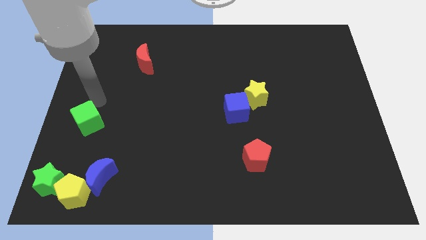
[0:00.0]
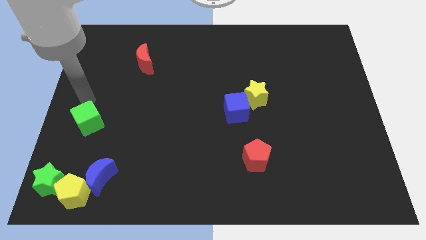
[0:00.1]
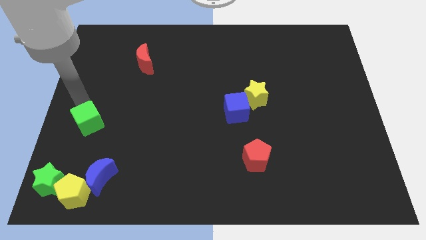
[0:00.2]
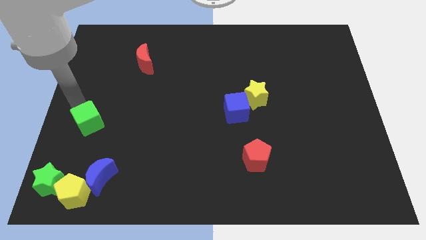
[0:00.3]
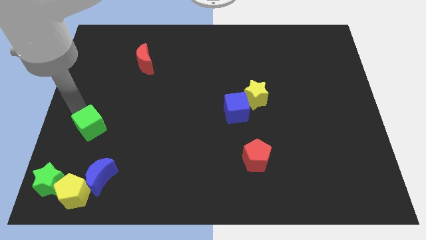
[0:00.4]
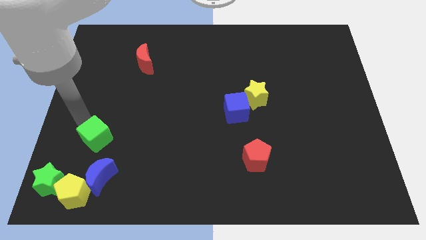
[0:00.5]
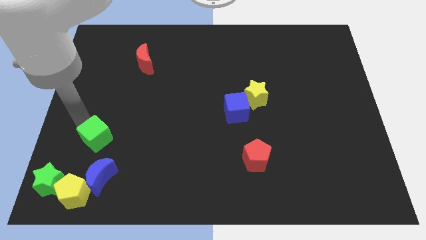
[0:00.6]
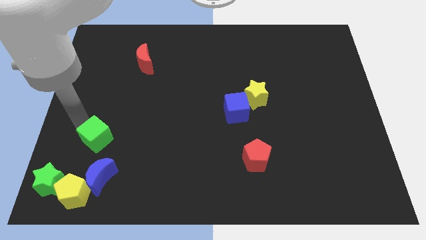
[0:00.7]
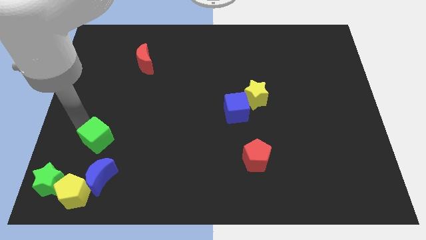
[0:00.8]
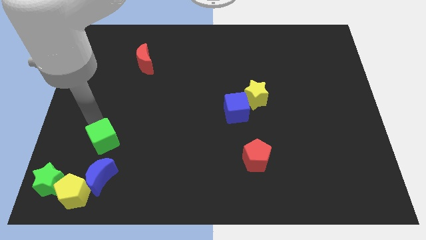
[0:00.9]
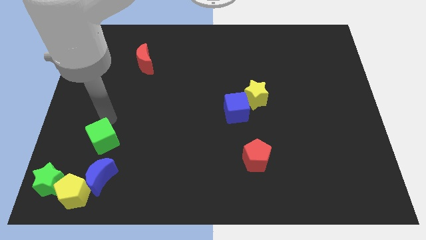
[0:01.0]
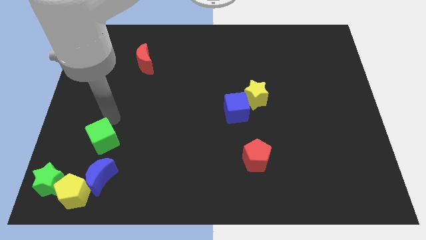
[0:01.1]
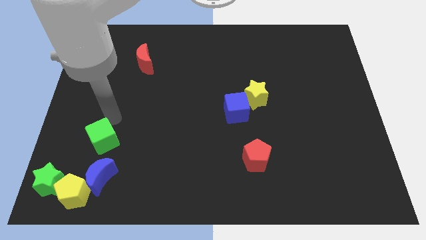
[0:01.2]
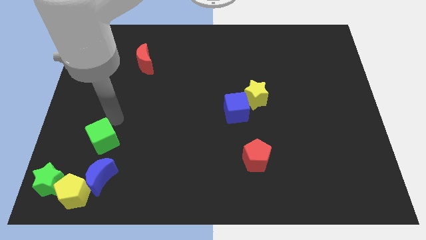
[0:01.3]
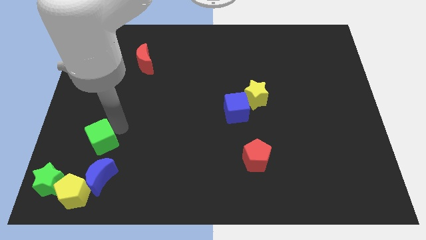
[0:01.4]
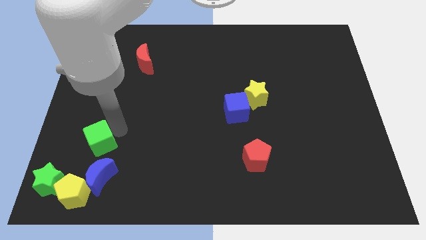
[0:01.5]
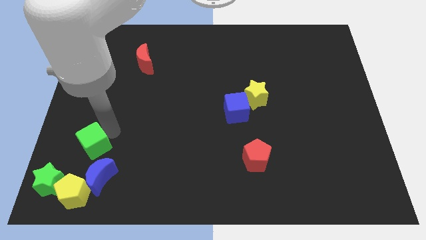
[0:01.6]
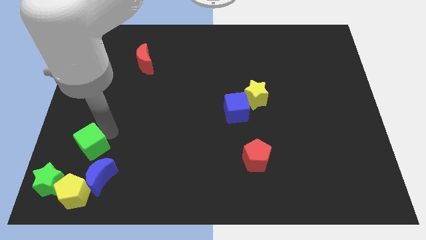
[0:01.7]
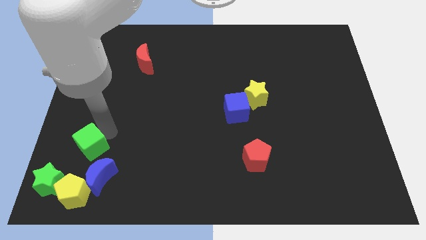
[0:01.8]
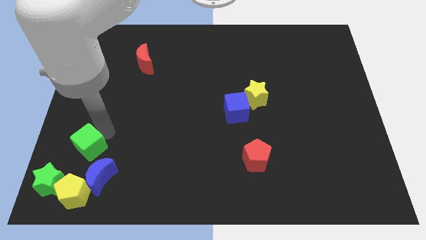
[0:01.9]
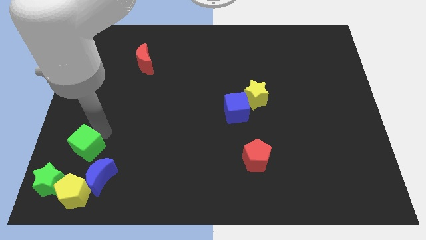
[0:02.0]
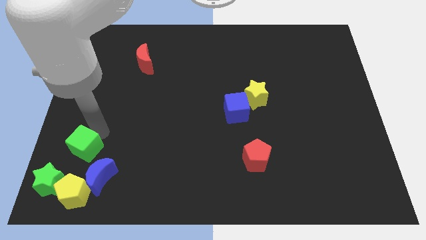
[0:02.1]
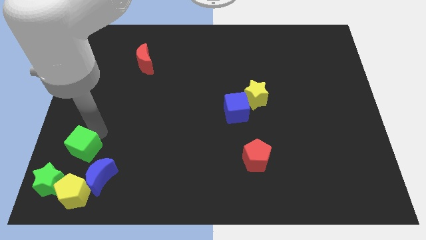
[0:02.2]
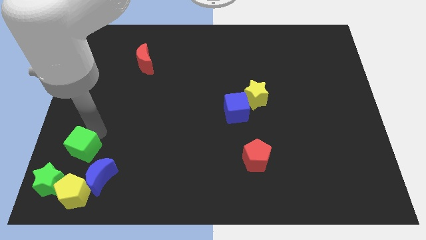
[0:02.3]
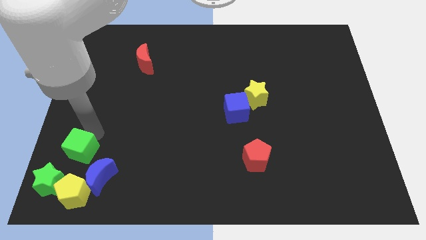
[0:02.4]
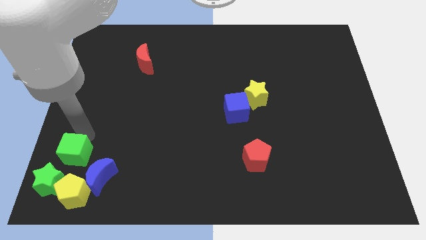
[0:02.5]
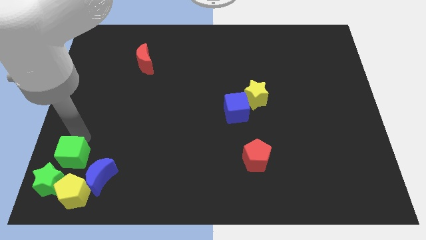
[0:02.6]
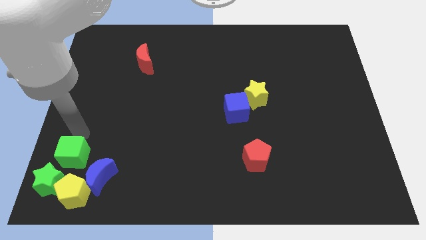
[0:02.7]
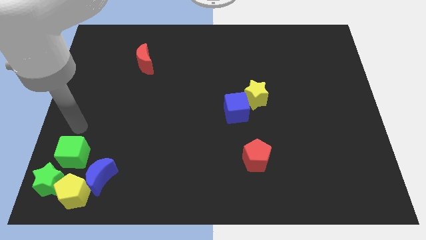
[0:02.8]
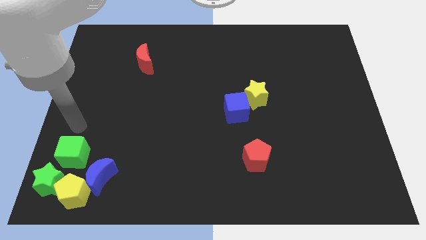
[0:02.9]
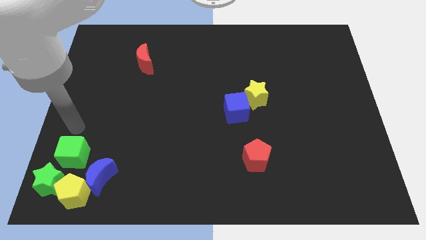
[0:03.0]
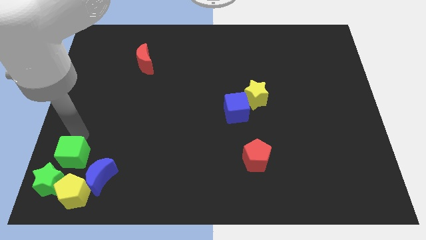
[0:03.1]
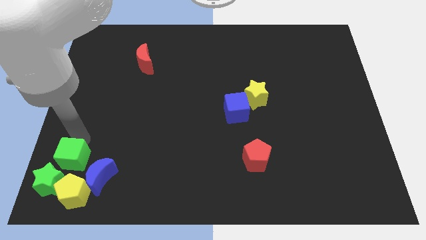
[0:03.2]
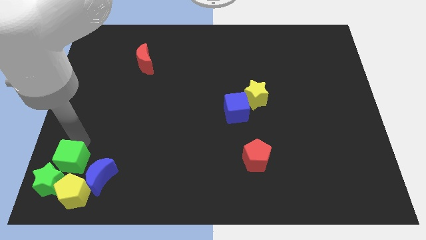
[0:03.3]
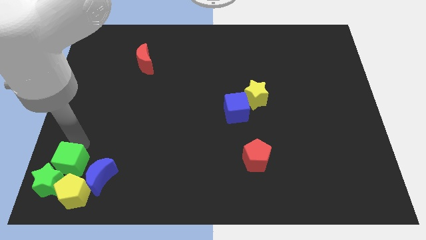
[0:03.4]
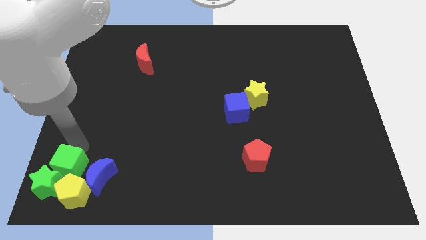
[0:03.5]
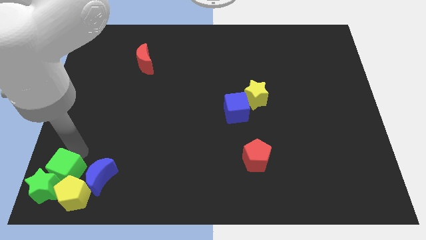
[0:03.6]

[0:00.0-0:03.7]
move the green cube to the top of the yellow pentagon

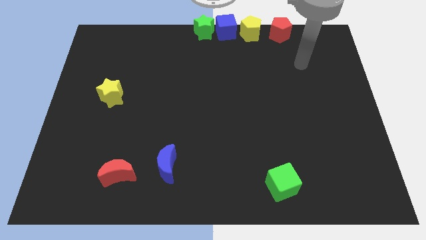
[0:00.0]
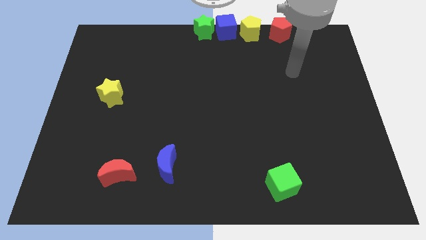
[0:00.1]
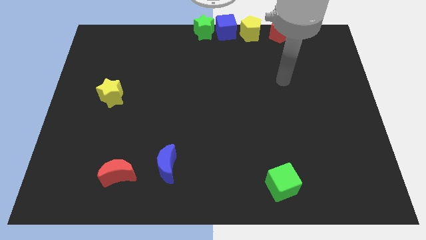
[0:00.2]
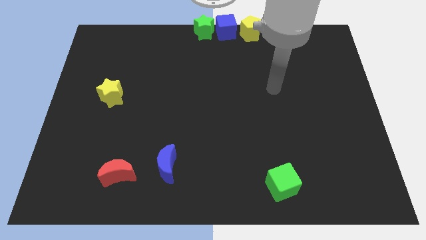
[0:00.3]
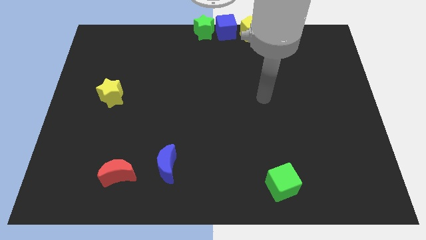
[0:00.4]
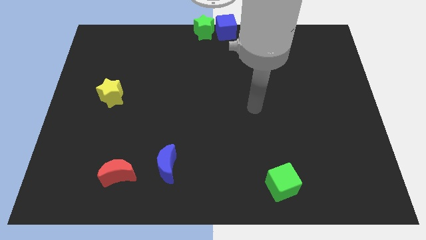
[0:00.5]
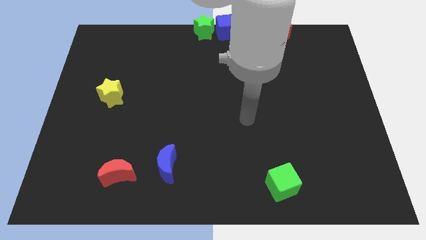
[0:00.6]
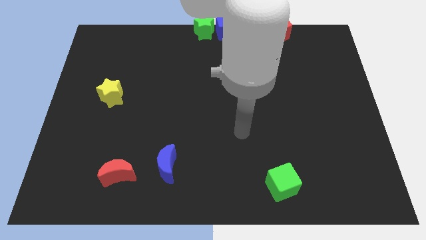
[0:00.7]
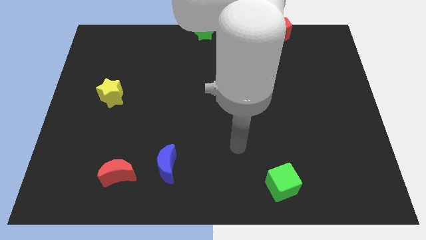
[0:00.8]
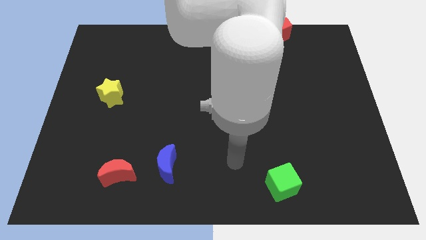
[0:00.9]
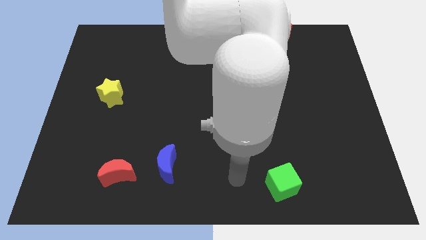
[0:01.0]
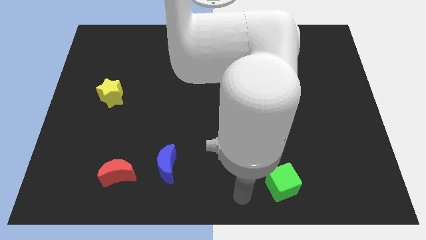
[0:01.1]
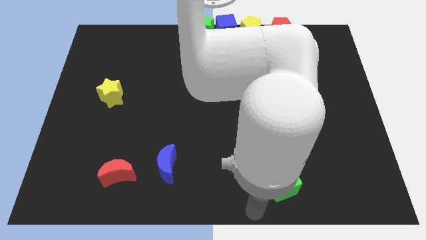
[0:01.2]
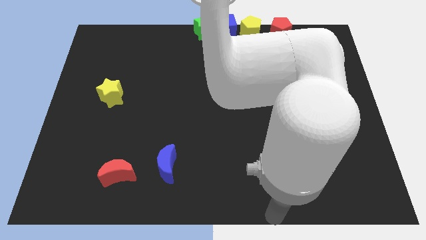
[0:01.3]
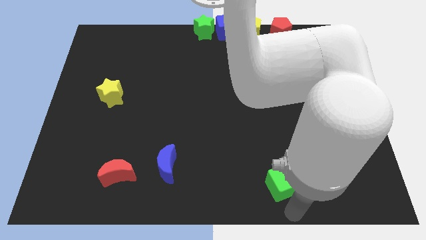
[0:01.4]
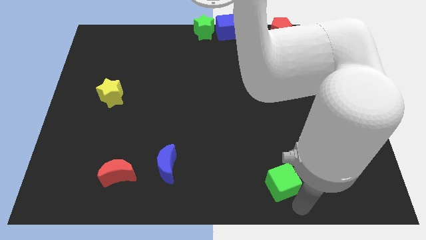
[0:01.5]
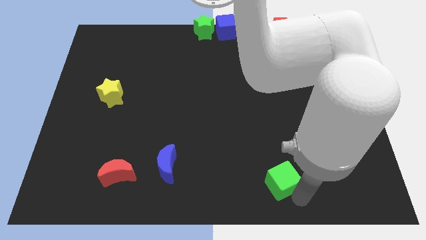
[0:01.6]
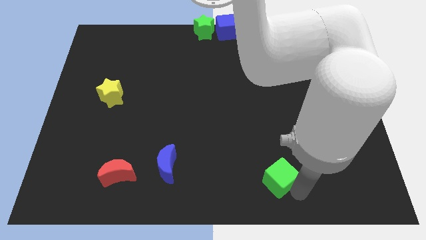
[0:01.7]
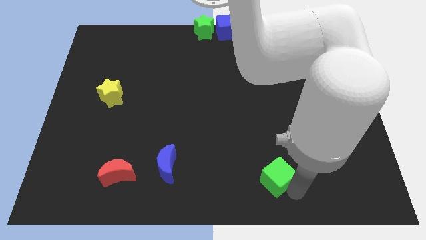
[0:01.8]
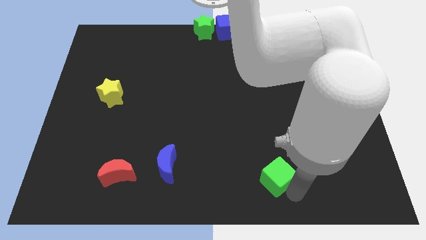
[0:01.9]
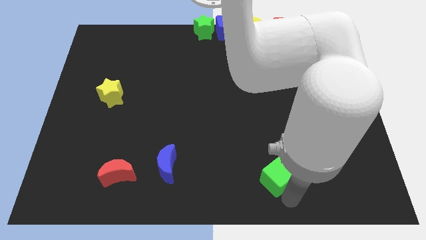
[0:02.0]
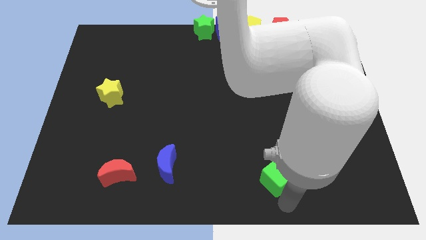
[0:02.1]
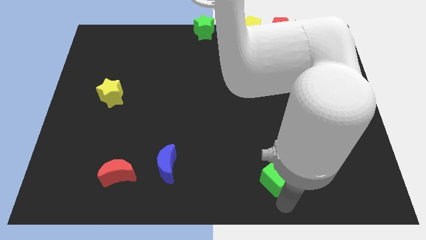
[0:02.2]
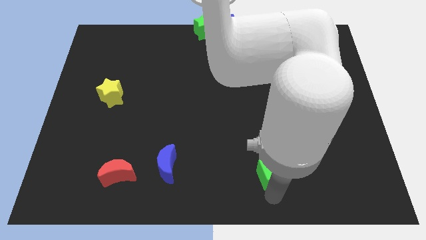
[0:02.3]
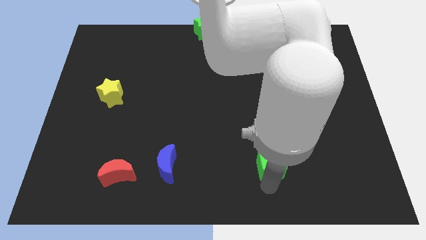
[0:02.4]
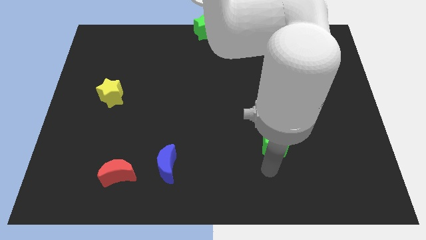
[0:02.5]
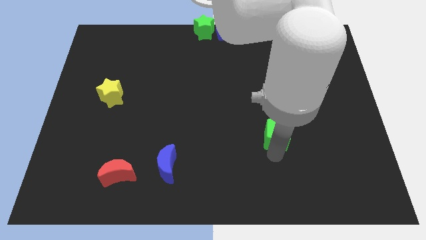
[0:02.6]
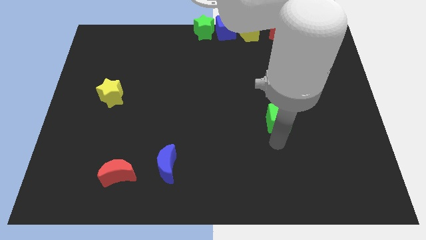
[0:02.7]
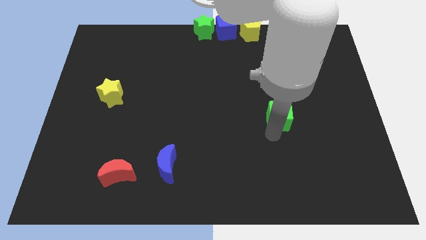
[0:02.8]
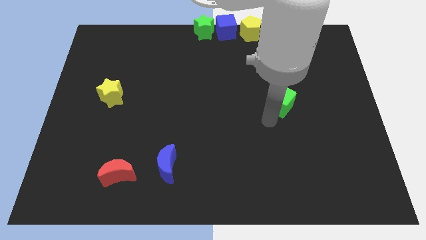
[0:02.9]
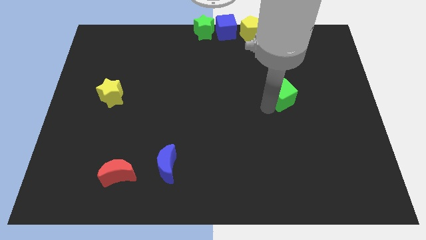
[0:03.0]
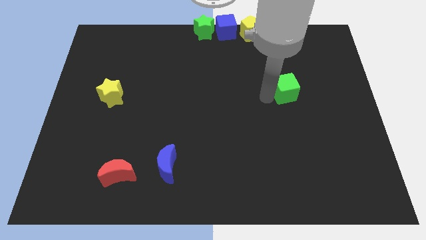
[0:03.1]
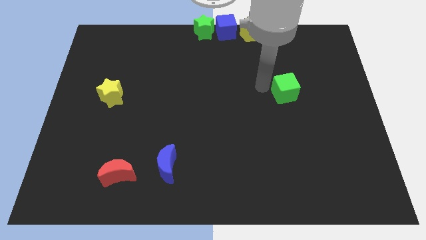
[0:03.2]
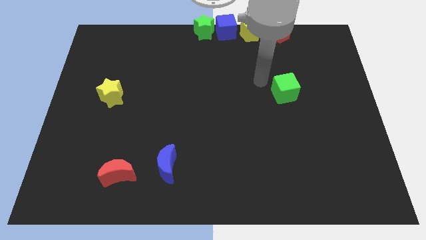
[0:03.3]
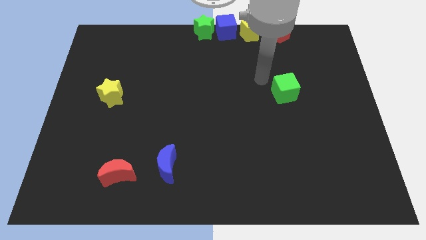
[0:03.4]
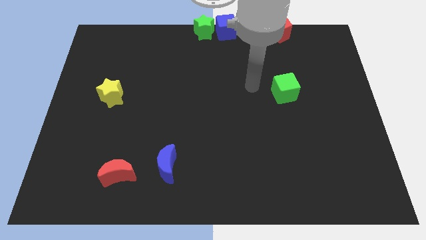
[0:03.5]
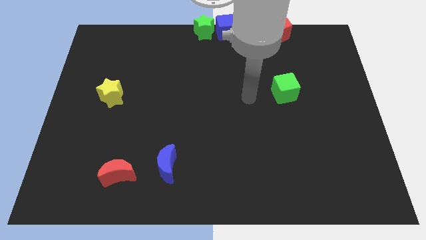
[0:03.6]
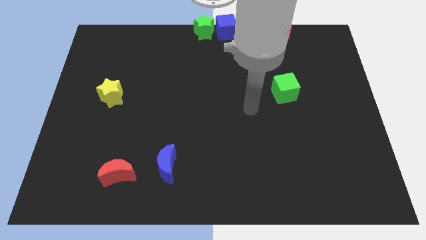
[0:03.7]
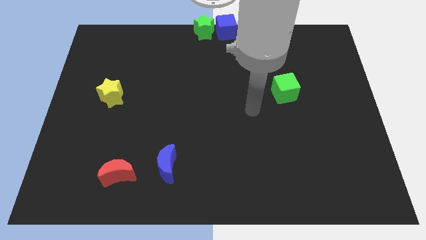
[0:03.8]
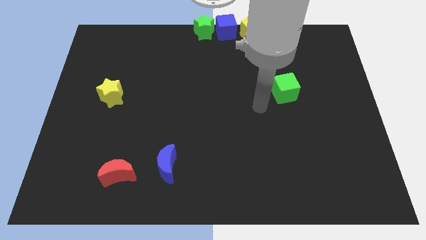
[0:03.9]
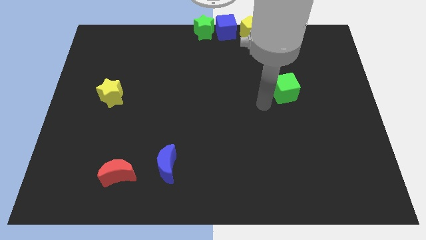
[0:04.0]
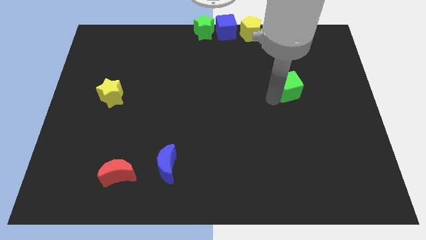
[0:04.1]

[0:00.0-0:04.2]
place green cube vertically below red pentagon

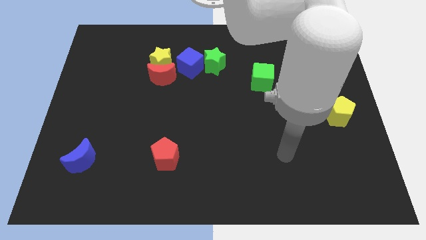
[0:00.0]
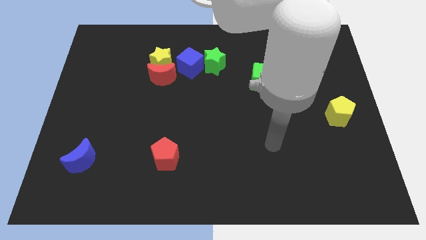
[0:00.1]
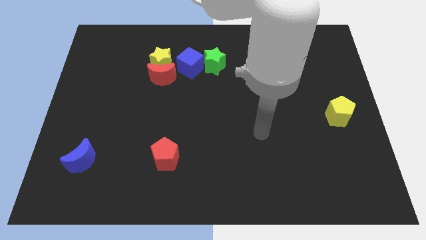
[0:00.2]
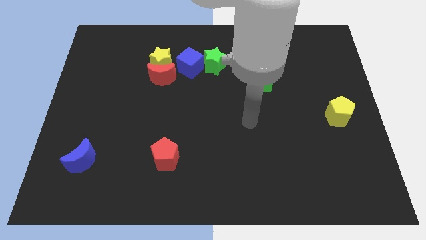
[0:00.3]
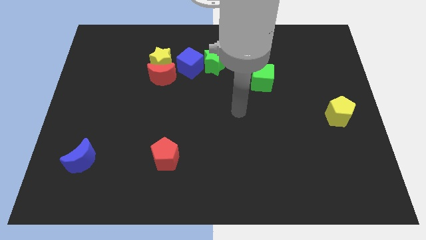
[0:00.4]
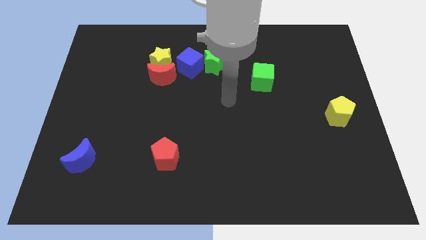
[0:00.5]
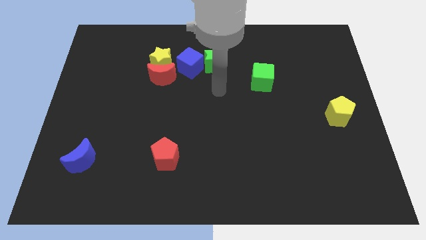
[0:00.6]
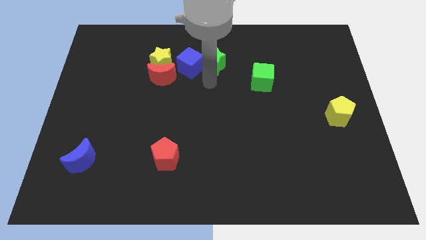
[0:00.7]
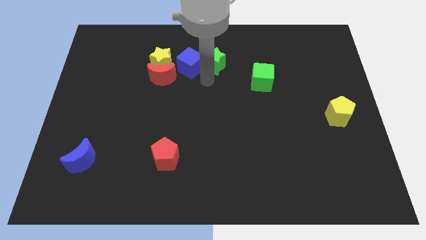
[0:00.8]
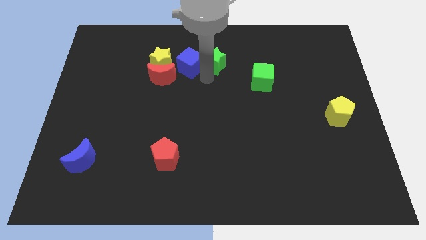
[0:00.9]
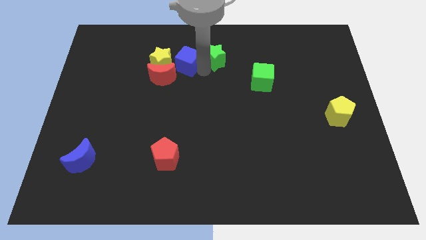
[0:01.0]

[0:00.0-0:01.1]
tap the edges of blue cube and green star
